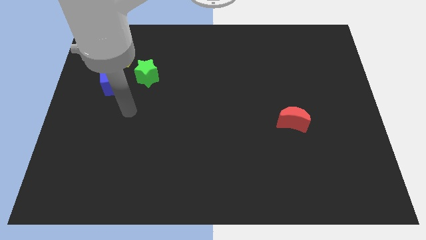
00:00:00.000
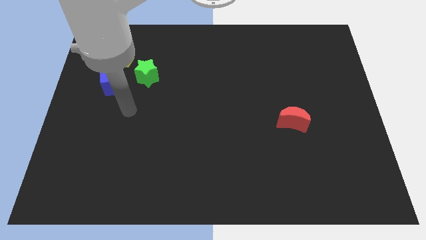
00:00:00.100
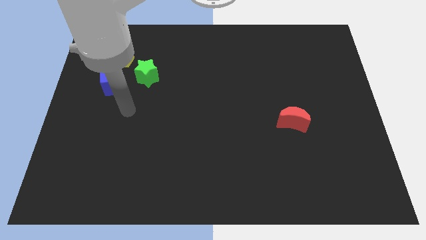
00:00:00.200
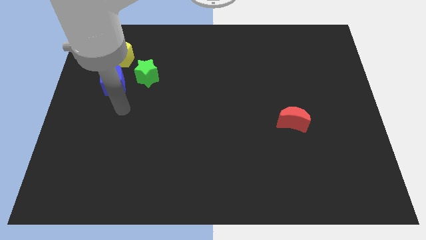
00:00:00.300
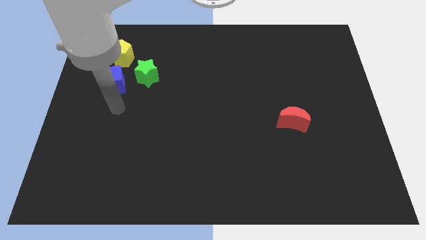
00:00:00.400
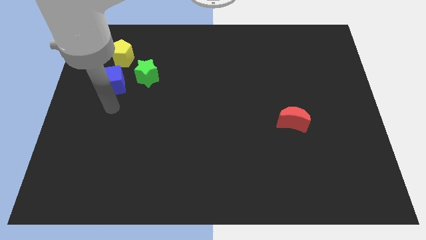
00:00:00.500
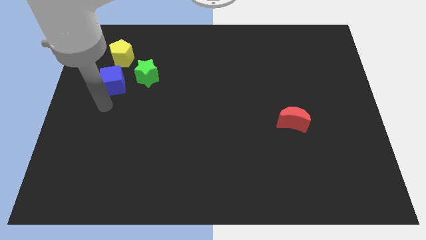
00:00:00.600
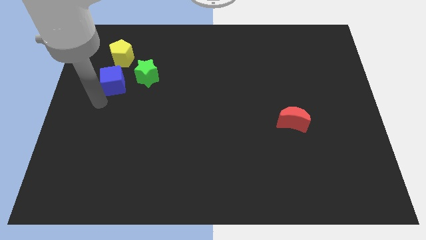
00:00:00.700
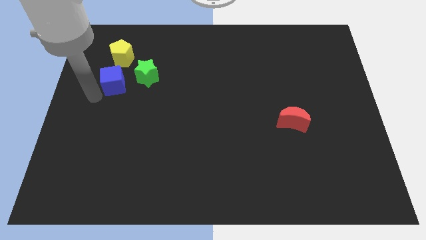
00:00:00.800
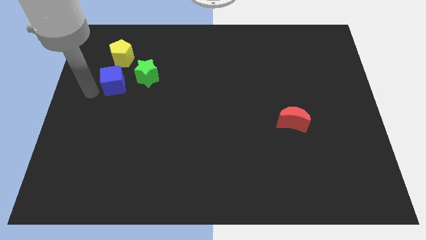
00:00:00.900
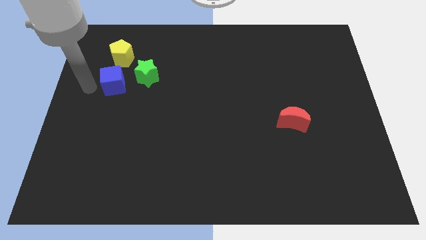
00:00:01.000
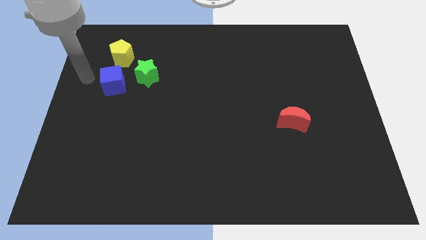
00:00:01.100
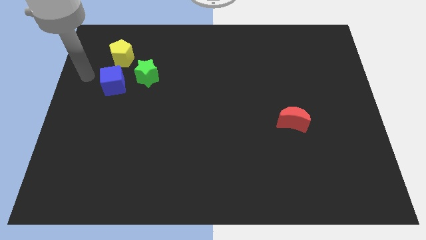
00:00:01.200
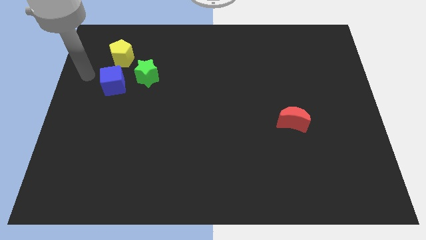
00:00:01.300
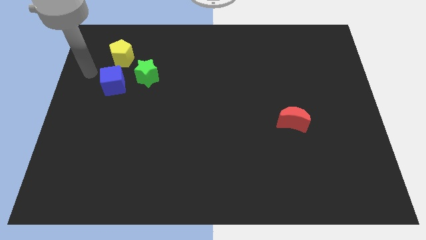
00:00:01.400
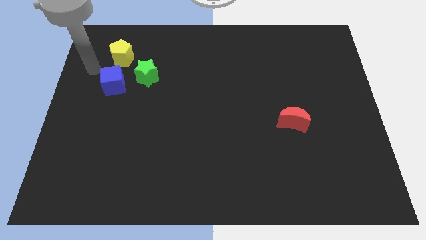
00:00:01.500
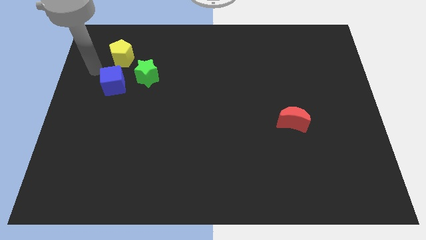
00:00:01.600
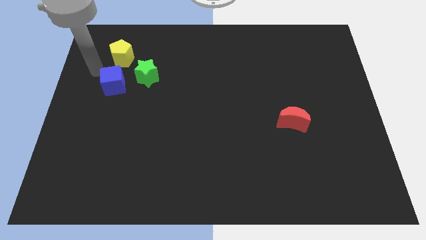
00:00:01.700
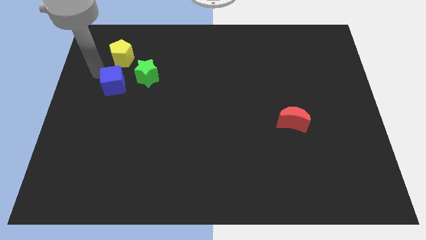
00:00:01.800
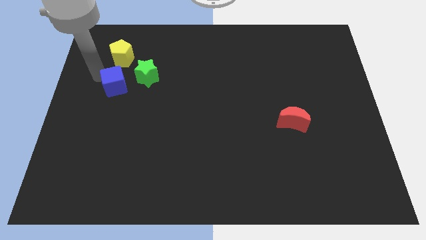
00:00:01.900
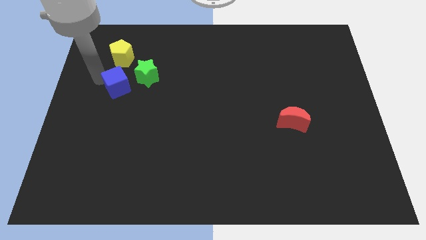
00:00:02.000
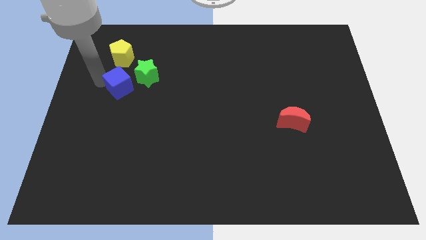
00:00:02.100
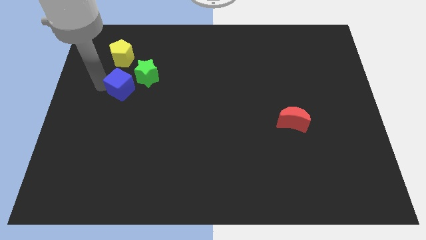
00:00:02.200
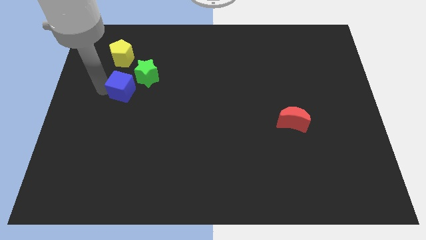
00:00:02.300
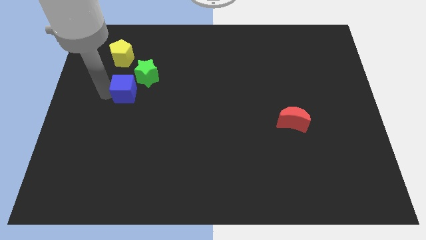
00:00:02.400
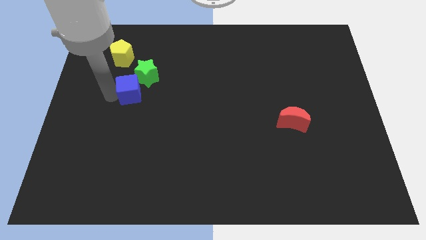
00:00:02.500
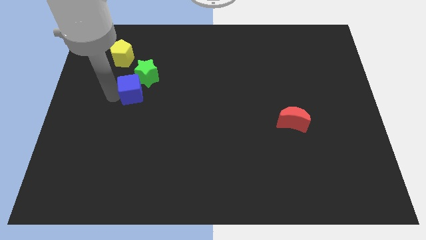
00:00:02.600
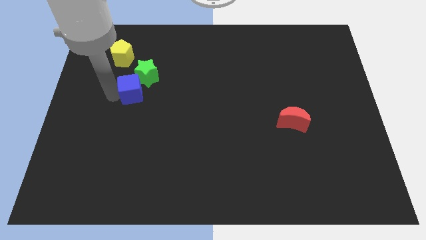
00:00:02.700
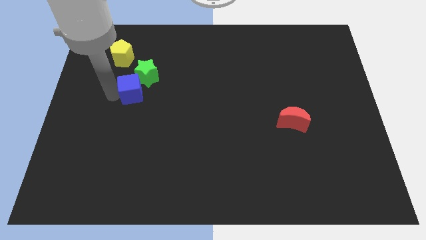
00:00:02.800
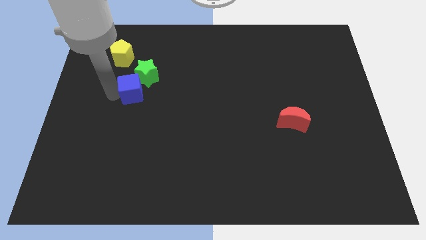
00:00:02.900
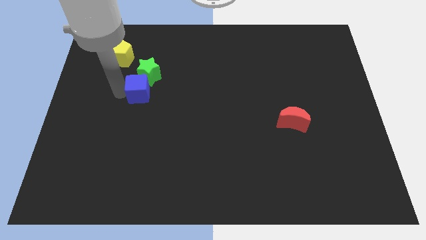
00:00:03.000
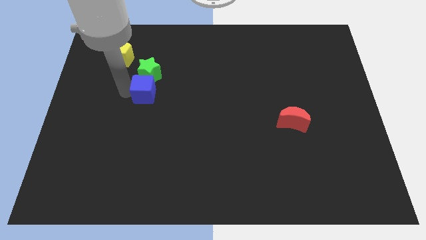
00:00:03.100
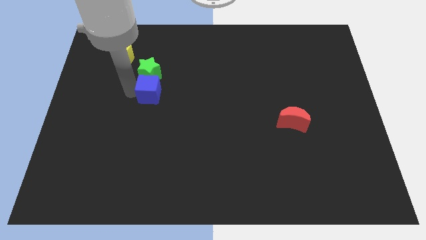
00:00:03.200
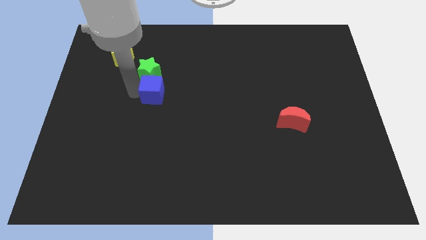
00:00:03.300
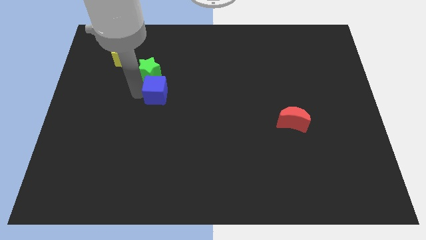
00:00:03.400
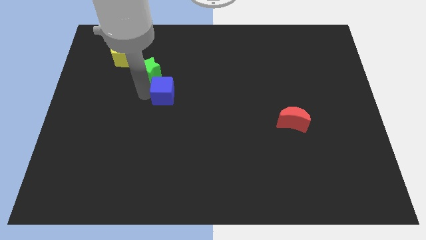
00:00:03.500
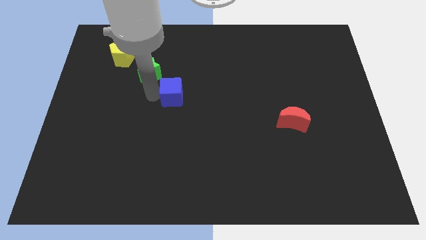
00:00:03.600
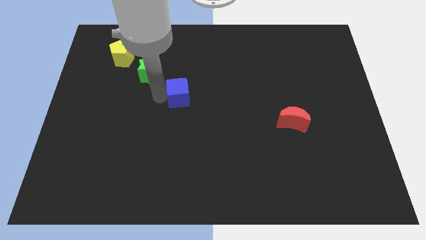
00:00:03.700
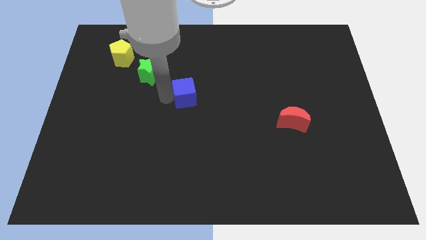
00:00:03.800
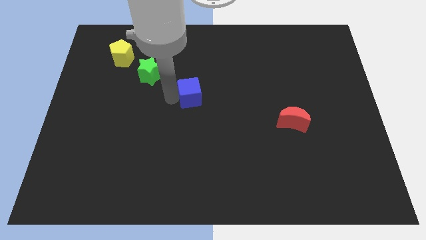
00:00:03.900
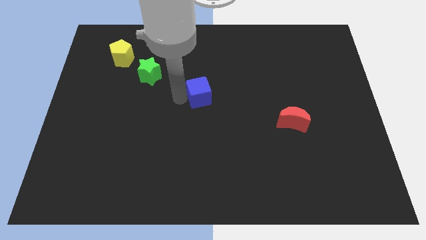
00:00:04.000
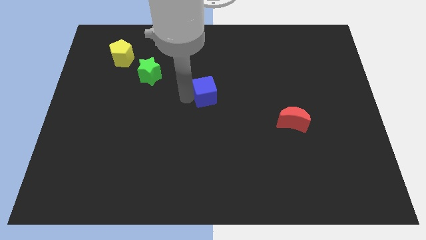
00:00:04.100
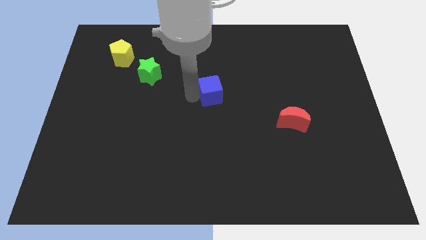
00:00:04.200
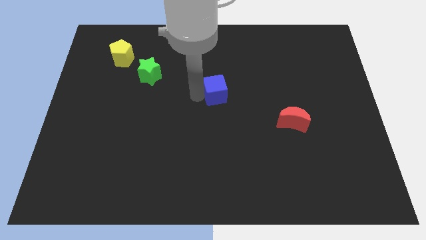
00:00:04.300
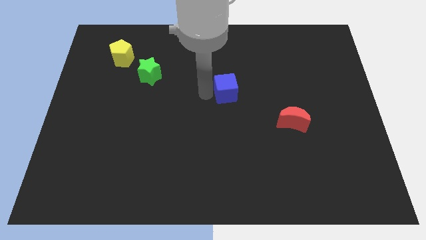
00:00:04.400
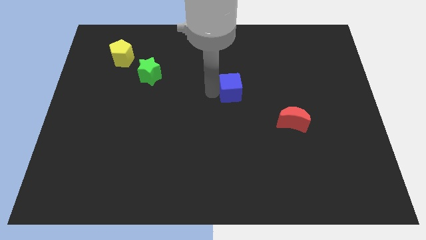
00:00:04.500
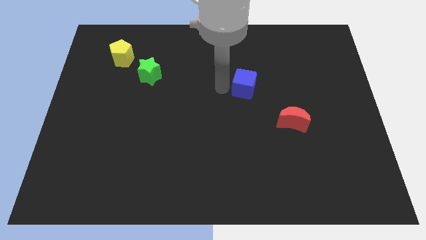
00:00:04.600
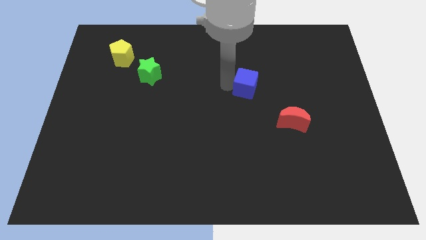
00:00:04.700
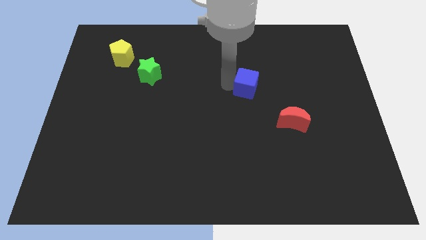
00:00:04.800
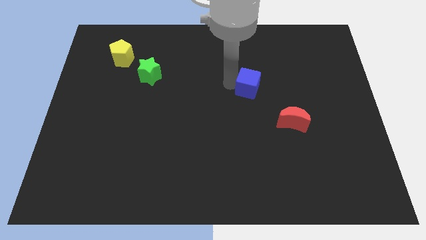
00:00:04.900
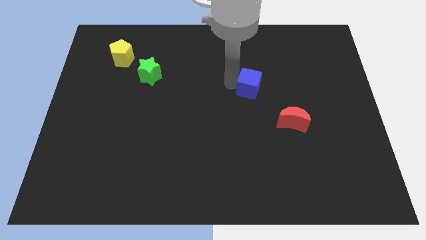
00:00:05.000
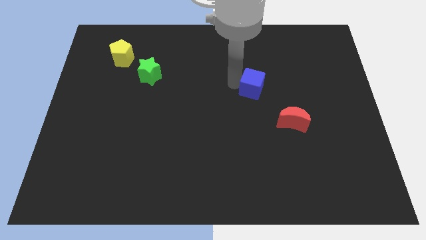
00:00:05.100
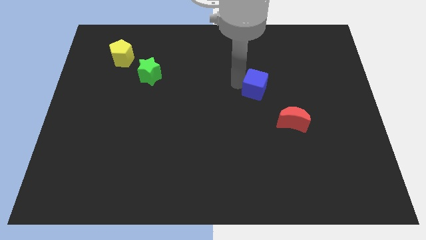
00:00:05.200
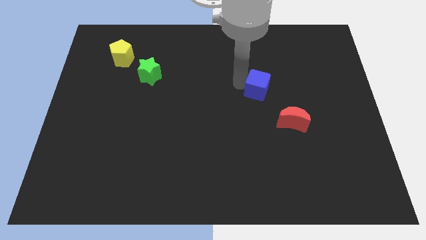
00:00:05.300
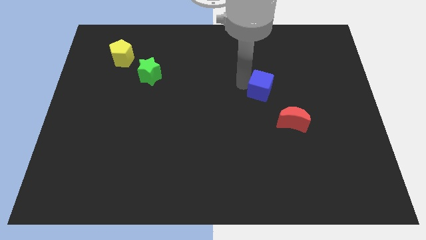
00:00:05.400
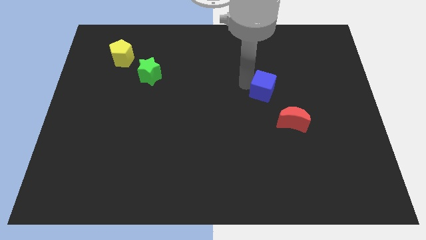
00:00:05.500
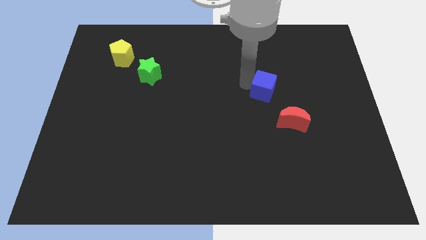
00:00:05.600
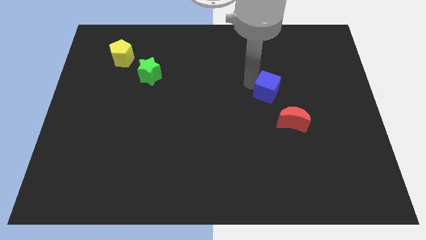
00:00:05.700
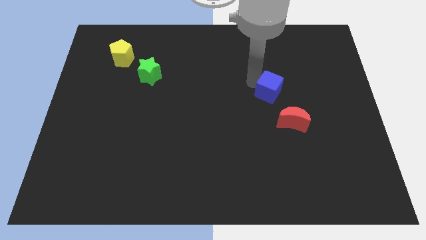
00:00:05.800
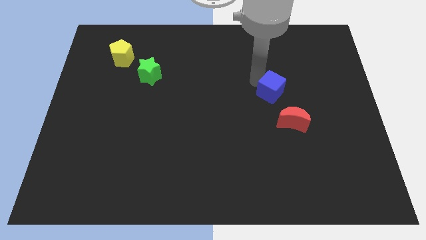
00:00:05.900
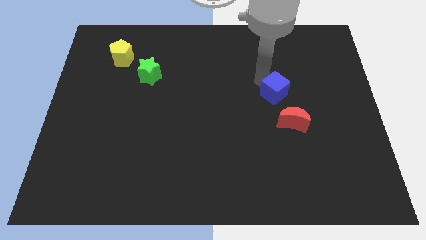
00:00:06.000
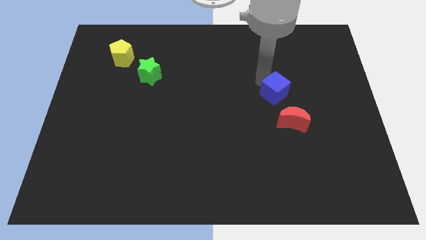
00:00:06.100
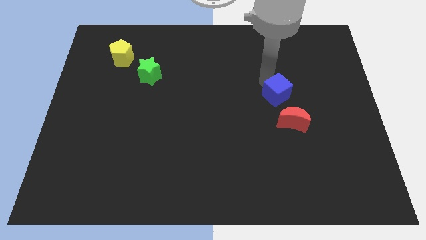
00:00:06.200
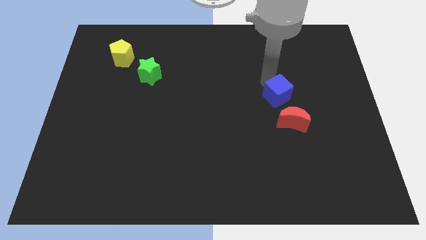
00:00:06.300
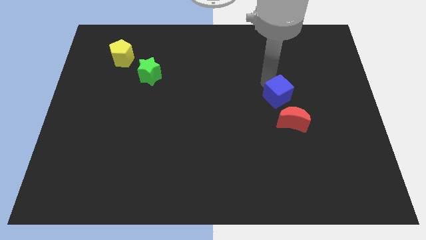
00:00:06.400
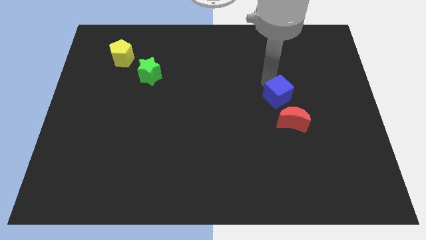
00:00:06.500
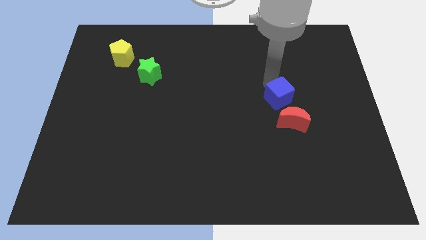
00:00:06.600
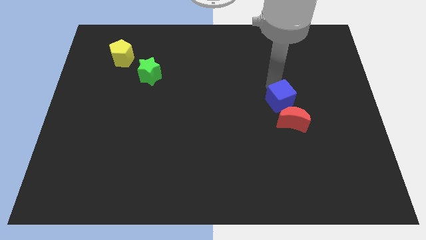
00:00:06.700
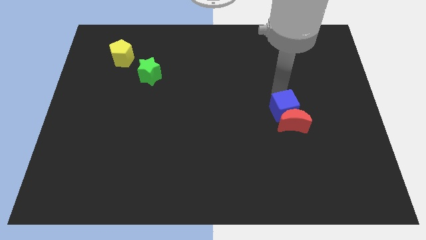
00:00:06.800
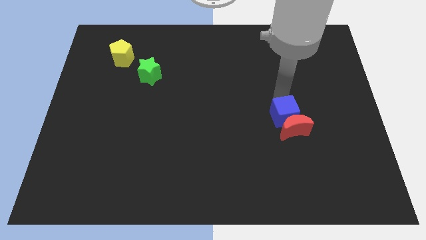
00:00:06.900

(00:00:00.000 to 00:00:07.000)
move the cube to the red moon

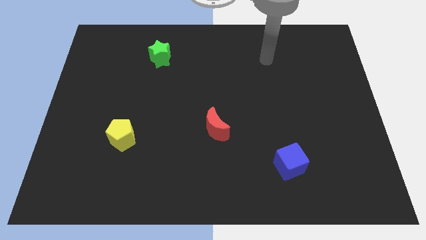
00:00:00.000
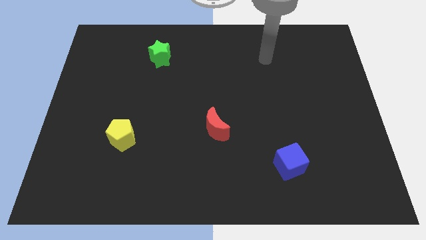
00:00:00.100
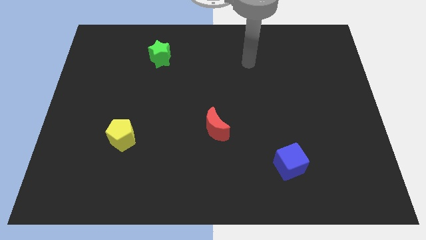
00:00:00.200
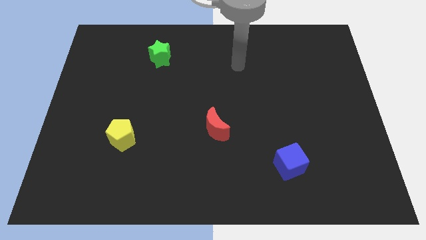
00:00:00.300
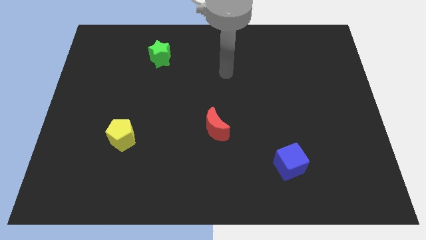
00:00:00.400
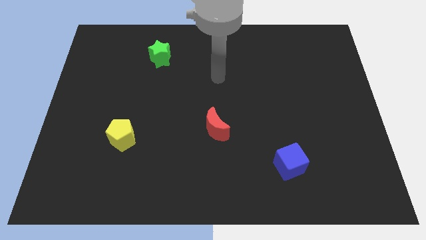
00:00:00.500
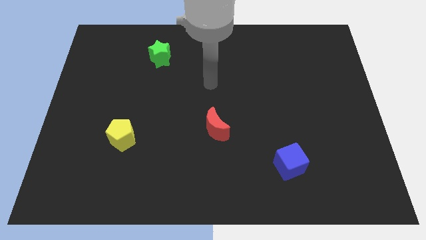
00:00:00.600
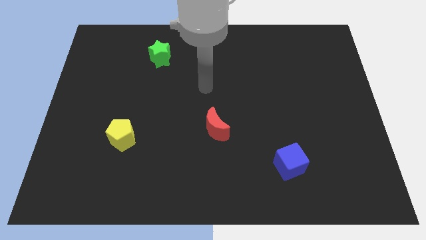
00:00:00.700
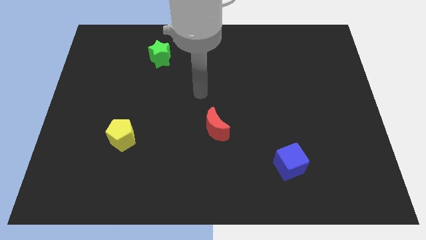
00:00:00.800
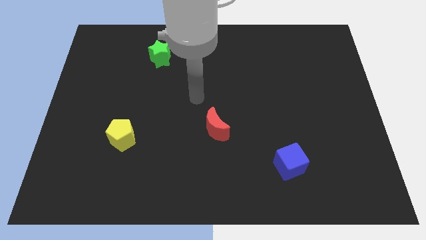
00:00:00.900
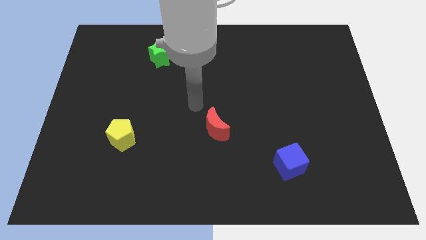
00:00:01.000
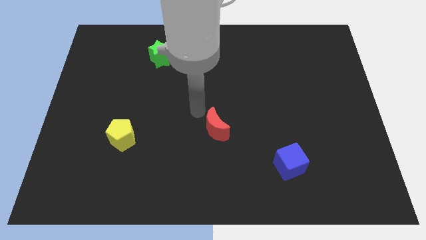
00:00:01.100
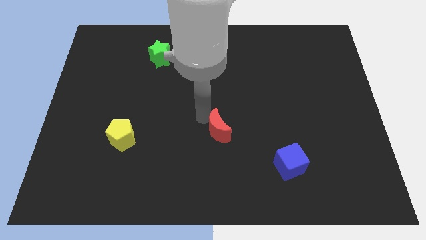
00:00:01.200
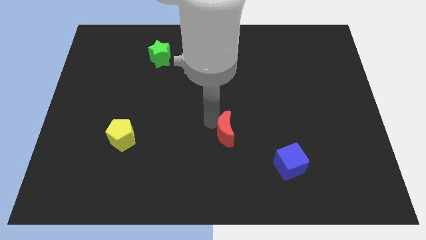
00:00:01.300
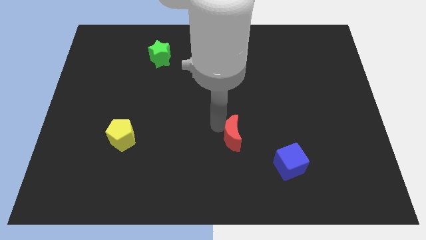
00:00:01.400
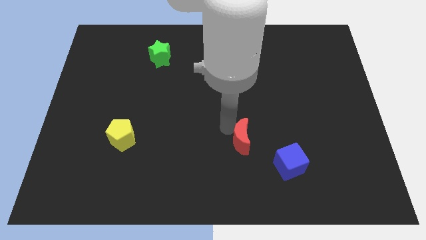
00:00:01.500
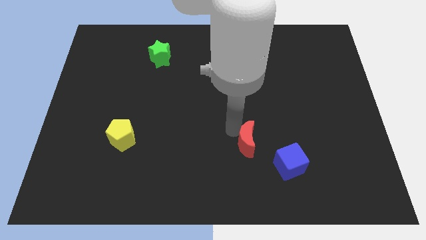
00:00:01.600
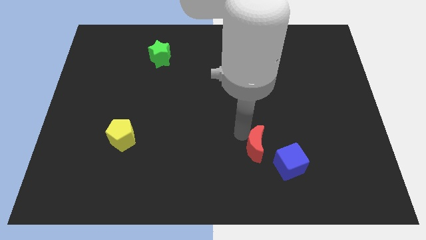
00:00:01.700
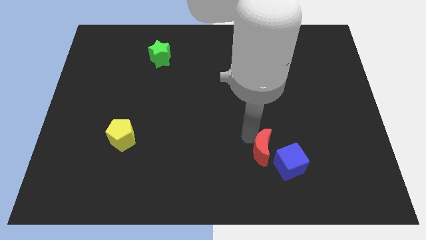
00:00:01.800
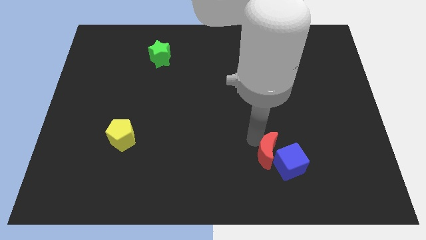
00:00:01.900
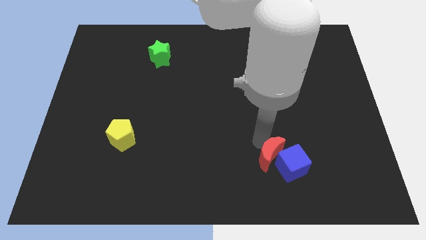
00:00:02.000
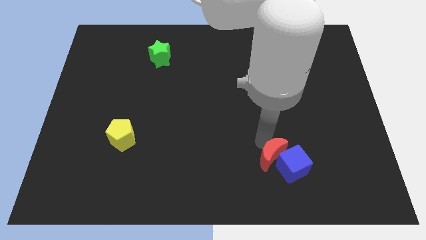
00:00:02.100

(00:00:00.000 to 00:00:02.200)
push the moon to the cube
